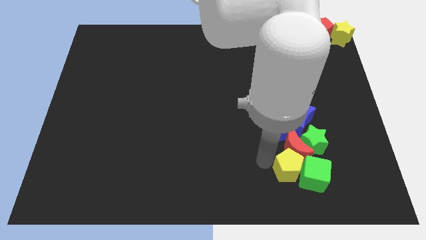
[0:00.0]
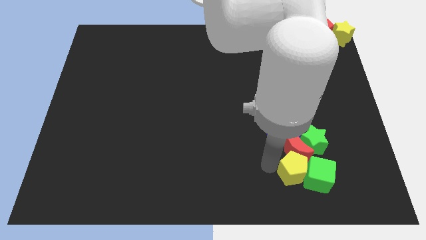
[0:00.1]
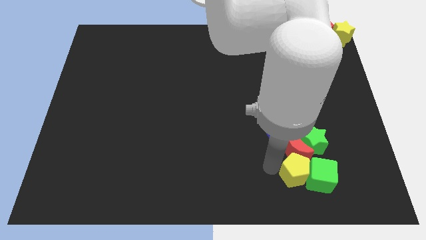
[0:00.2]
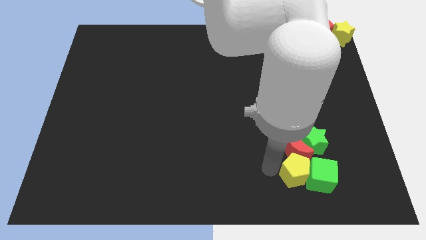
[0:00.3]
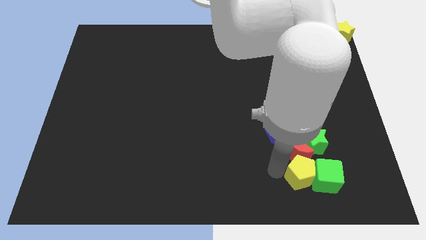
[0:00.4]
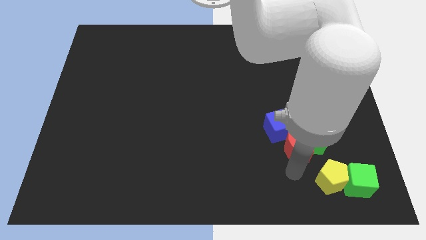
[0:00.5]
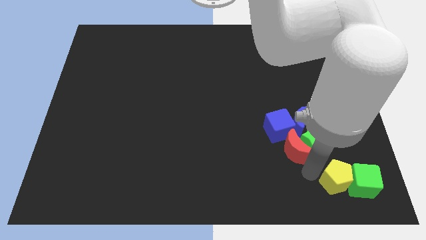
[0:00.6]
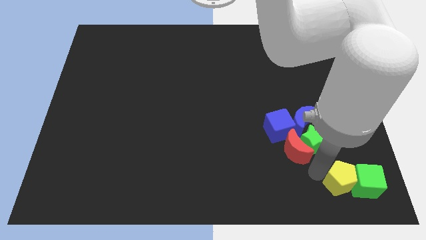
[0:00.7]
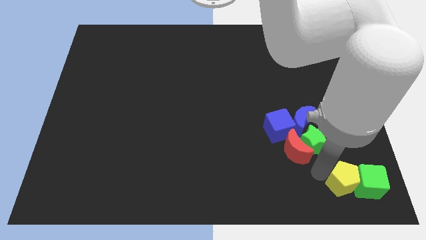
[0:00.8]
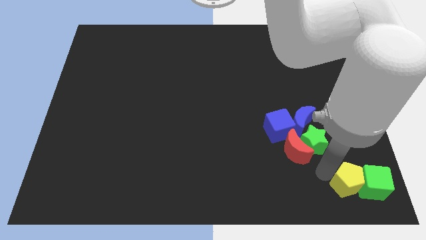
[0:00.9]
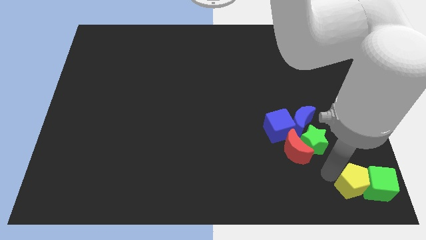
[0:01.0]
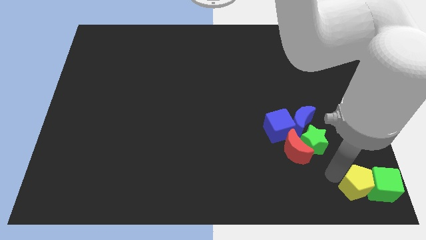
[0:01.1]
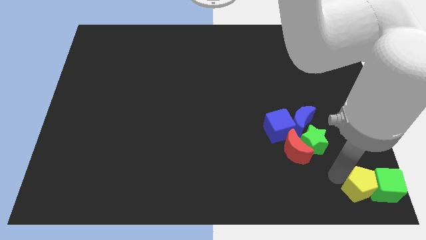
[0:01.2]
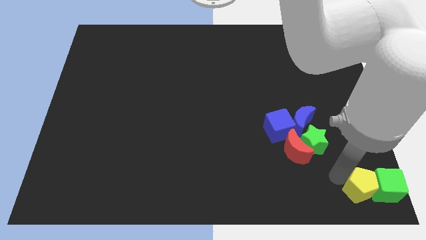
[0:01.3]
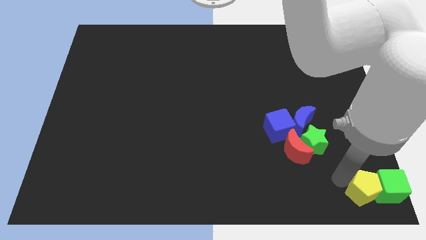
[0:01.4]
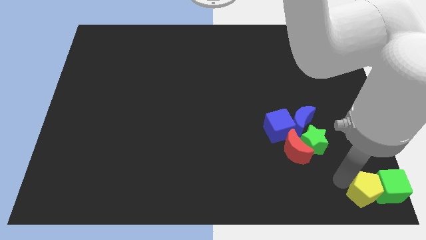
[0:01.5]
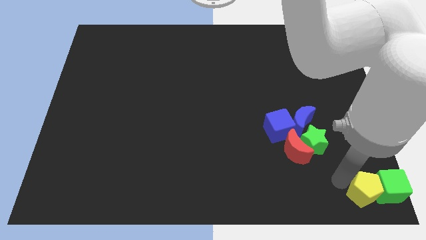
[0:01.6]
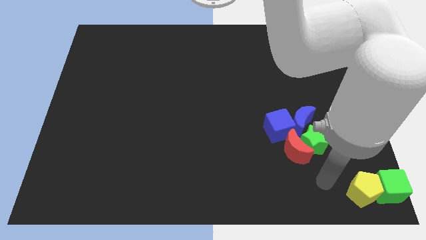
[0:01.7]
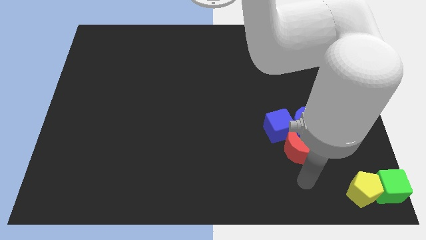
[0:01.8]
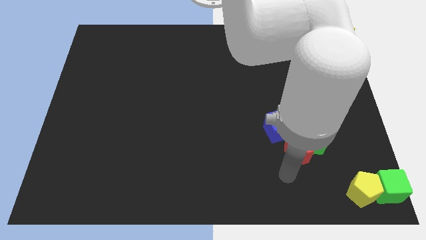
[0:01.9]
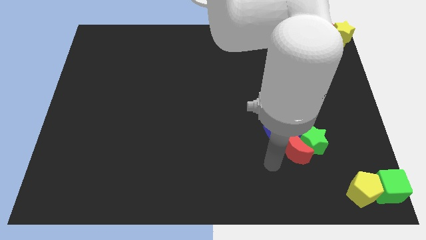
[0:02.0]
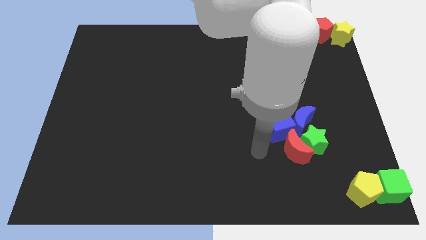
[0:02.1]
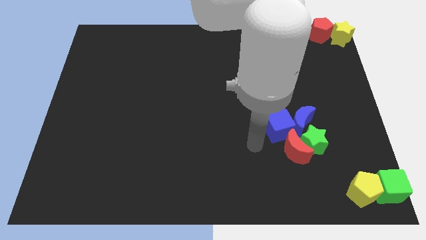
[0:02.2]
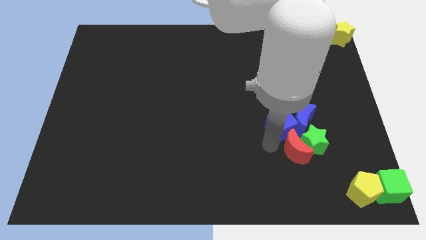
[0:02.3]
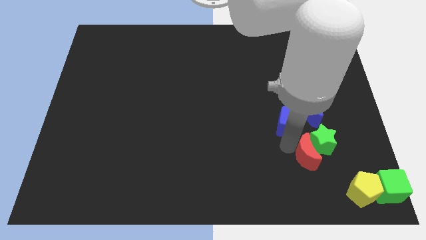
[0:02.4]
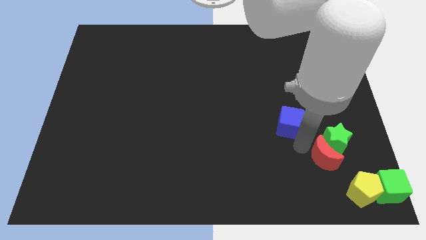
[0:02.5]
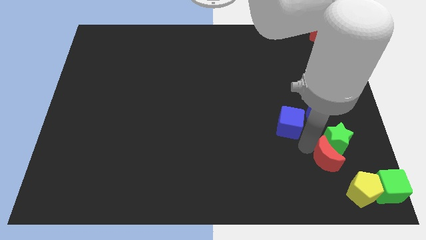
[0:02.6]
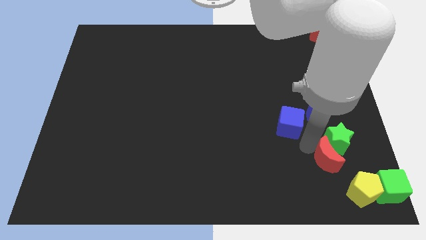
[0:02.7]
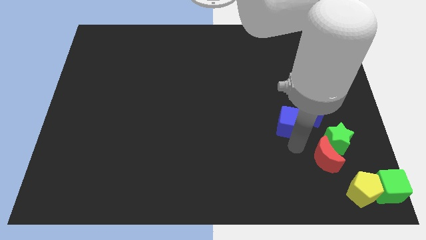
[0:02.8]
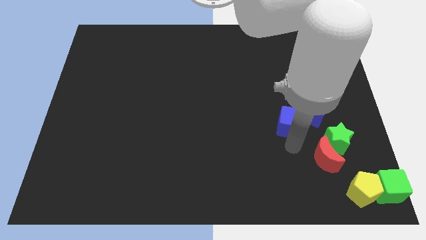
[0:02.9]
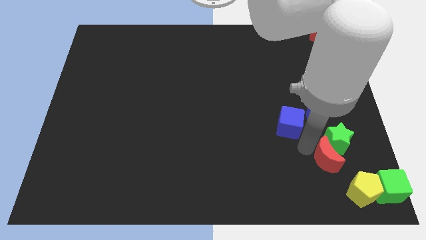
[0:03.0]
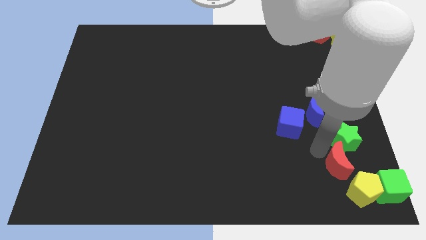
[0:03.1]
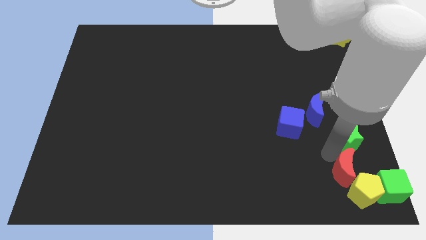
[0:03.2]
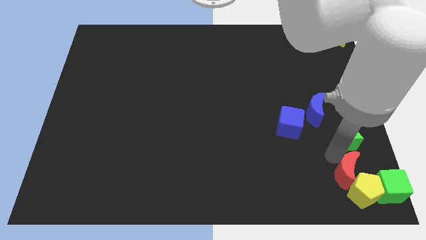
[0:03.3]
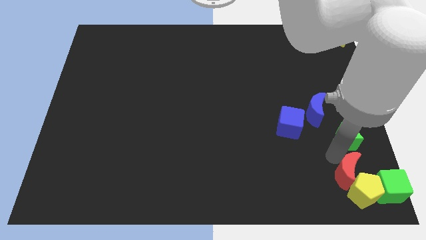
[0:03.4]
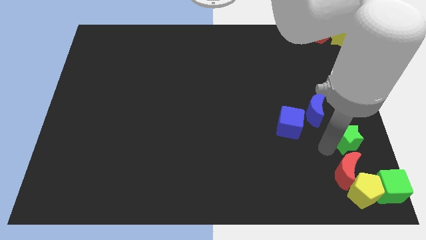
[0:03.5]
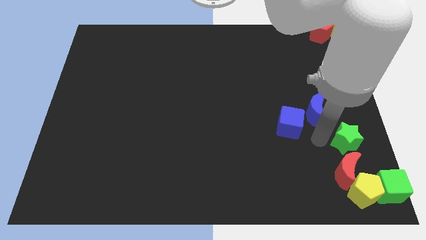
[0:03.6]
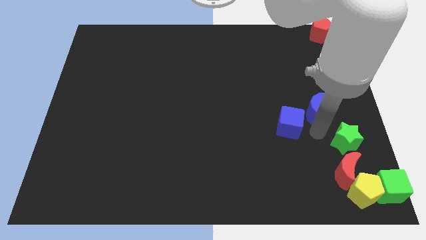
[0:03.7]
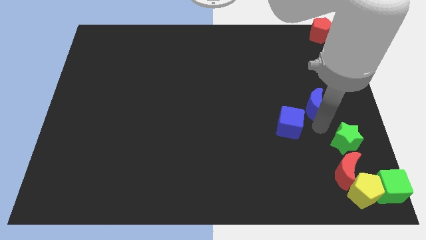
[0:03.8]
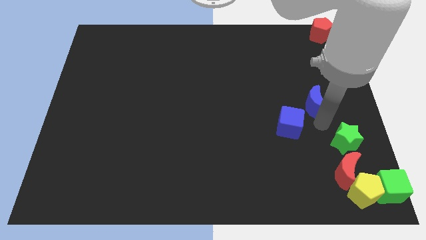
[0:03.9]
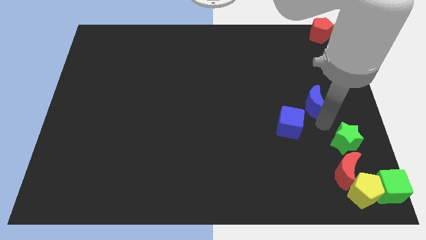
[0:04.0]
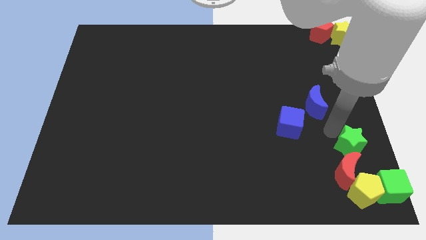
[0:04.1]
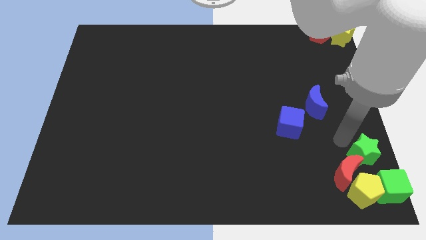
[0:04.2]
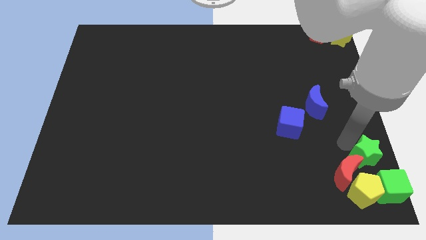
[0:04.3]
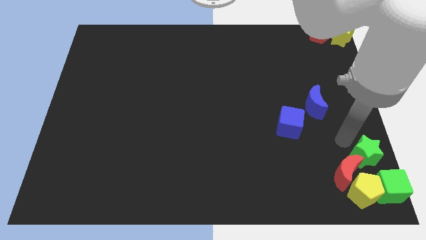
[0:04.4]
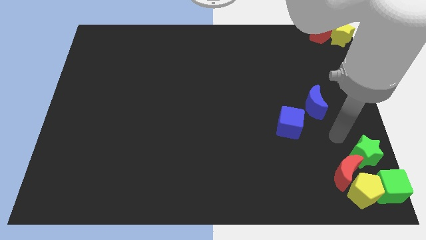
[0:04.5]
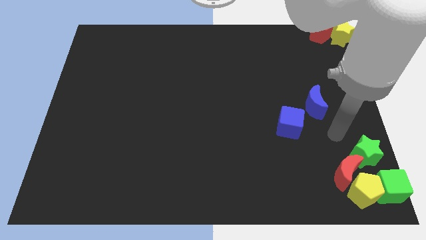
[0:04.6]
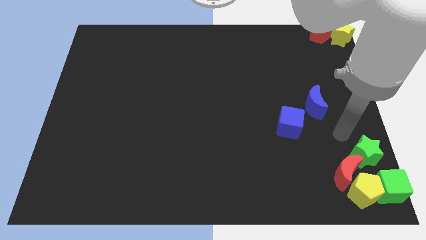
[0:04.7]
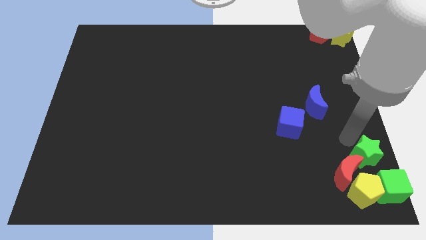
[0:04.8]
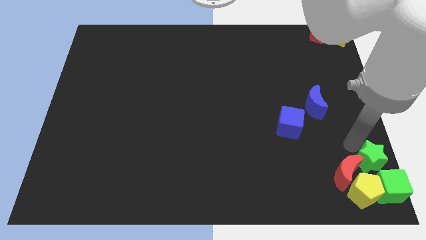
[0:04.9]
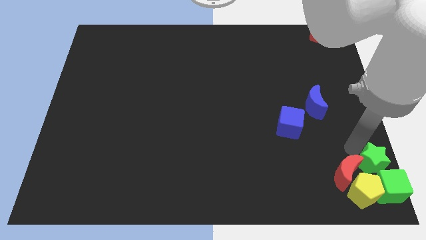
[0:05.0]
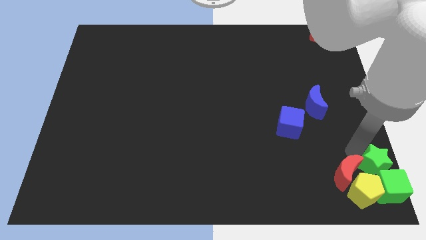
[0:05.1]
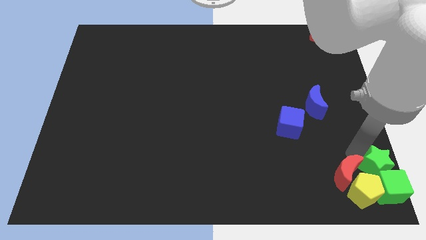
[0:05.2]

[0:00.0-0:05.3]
move the group of objects towards the bottom right of the board

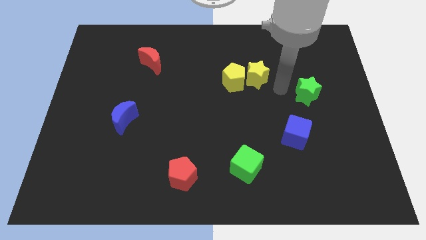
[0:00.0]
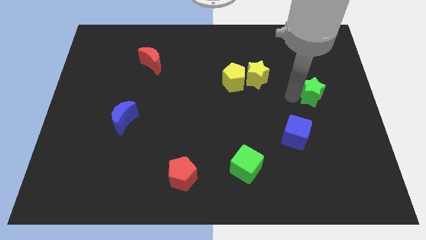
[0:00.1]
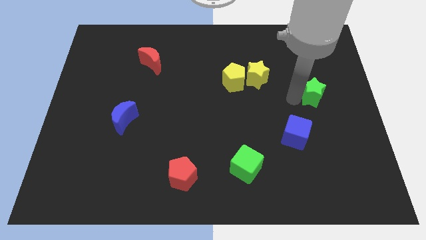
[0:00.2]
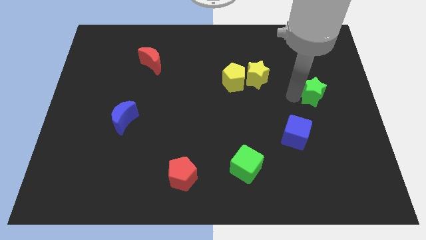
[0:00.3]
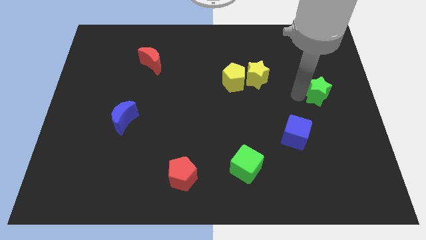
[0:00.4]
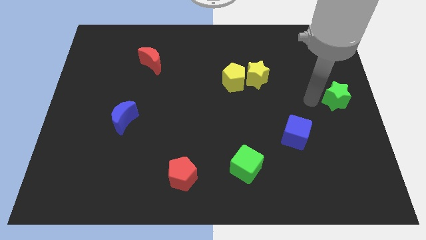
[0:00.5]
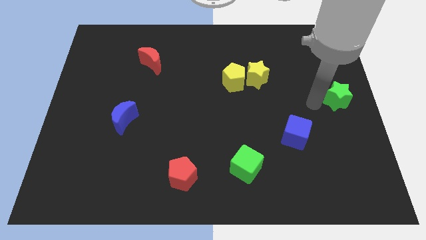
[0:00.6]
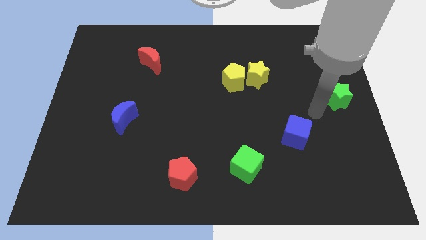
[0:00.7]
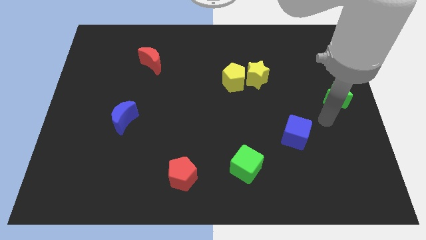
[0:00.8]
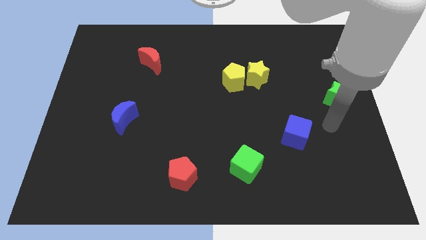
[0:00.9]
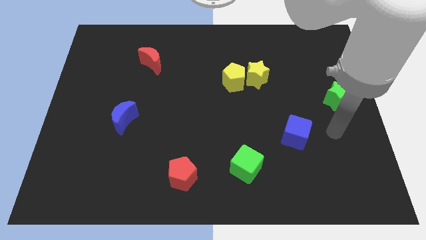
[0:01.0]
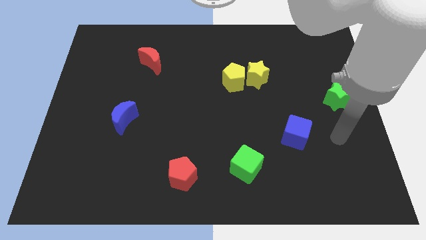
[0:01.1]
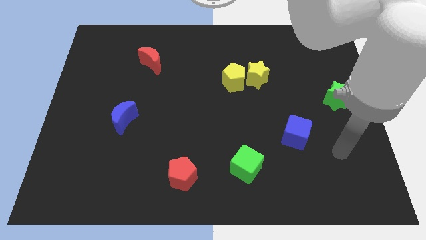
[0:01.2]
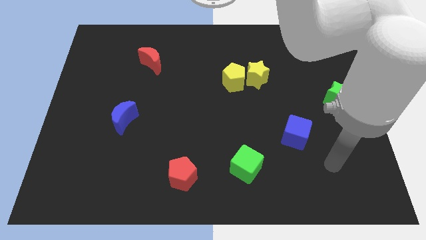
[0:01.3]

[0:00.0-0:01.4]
move the green star to the right center of the board

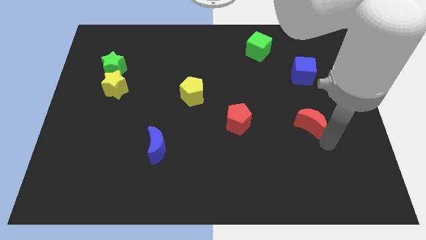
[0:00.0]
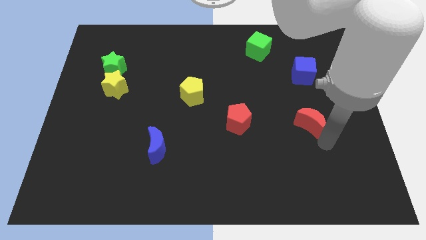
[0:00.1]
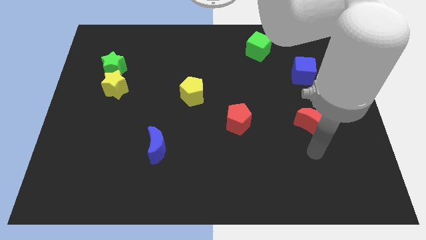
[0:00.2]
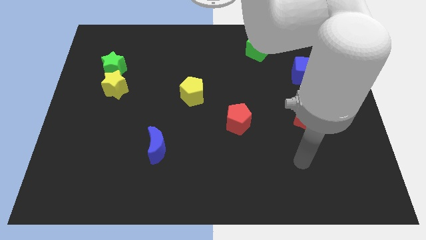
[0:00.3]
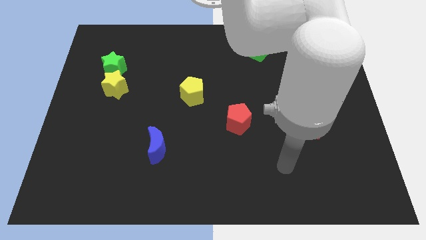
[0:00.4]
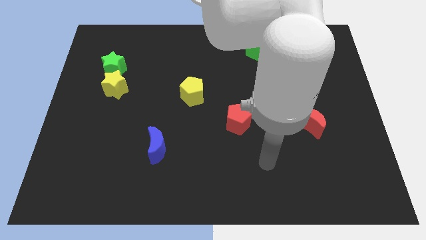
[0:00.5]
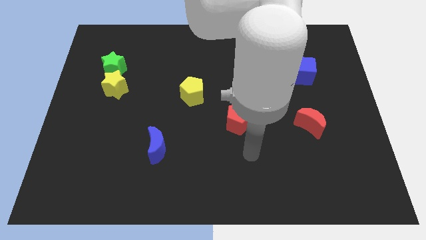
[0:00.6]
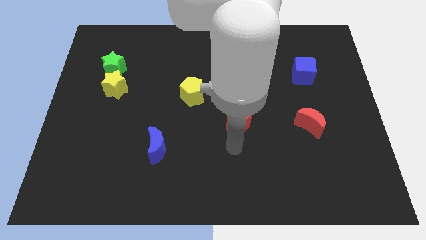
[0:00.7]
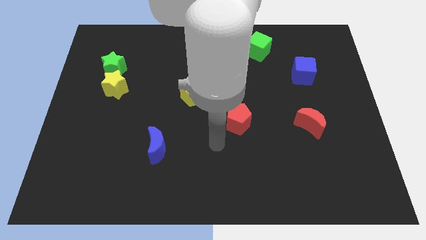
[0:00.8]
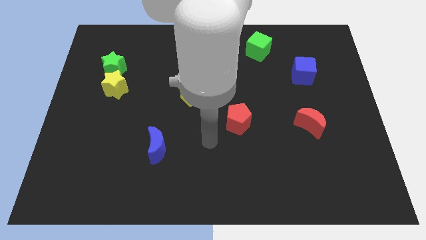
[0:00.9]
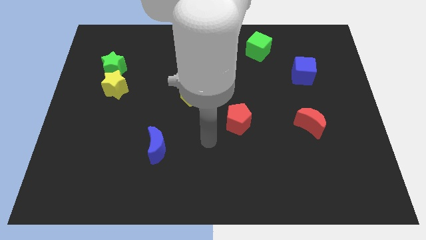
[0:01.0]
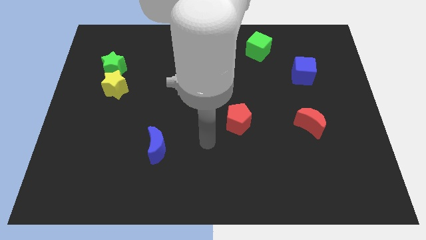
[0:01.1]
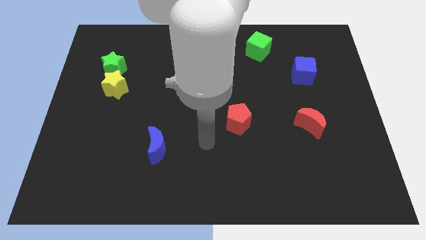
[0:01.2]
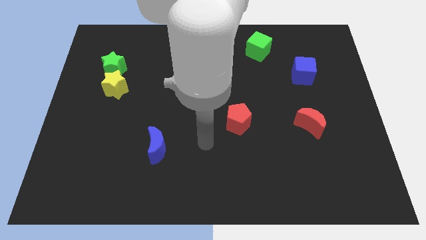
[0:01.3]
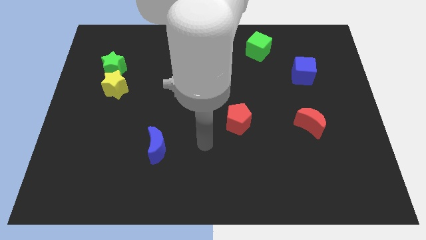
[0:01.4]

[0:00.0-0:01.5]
move away from the red moon

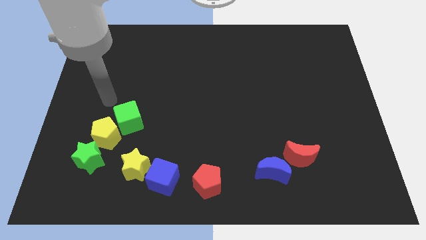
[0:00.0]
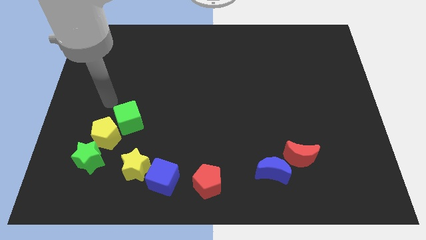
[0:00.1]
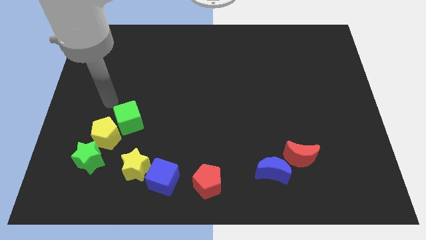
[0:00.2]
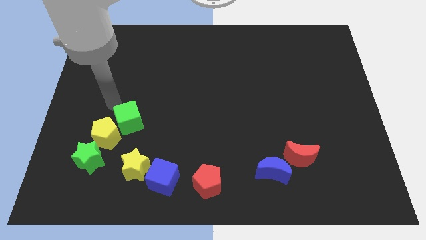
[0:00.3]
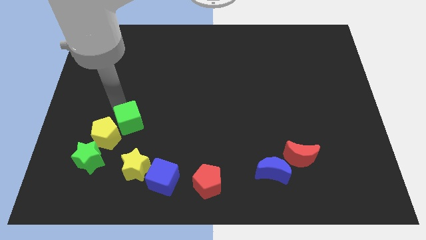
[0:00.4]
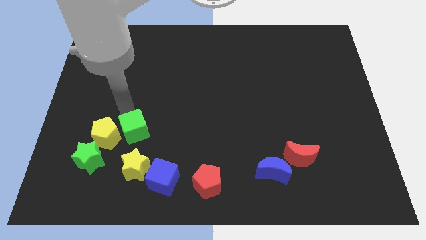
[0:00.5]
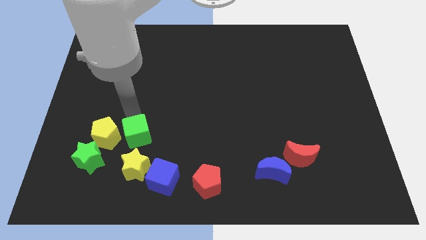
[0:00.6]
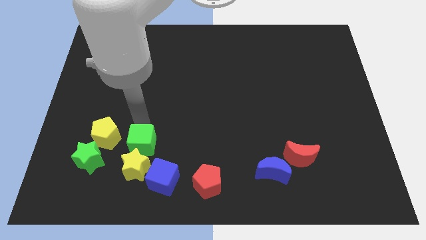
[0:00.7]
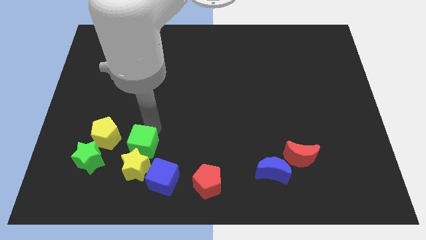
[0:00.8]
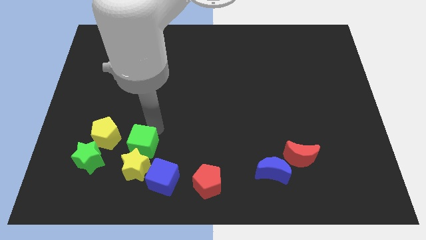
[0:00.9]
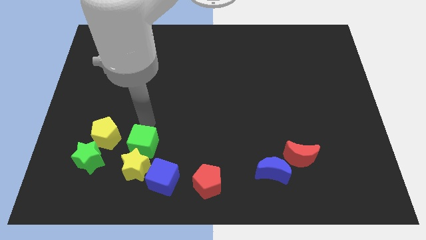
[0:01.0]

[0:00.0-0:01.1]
move the green cube on the top of yellow star
